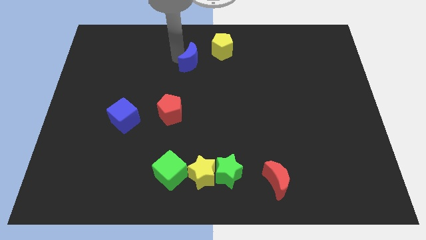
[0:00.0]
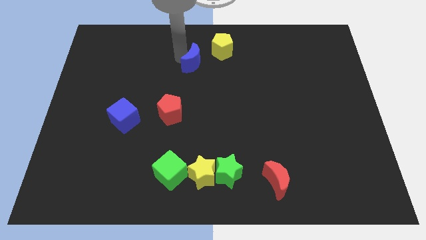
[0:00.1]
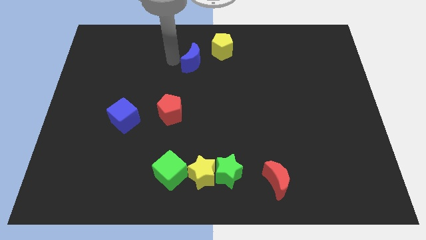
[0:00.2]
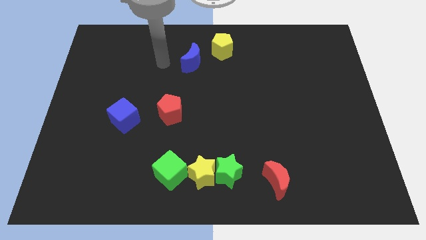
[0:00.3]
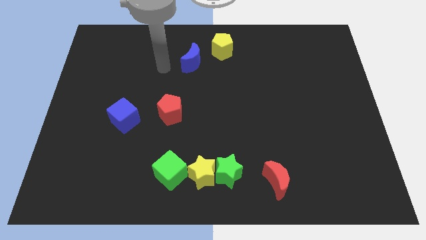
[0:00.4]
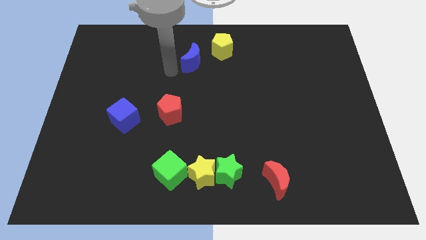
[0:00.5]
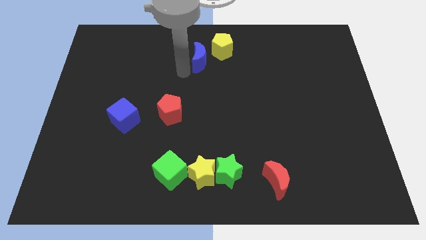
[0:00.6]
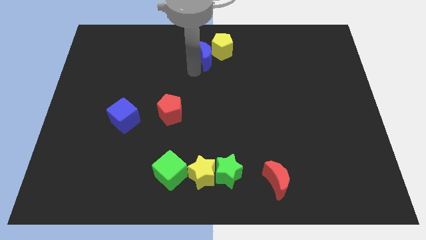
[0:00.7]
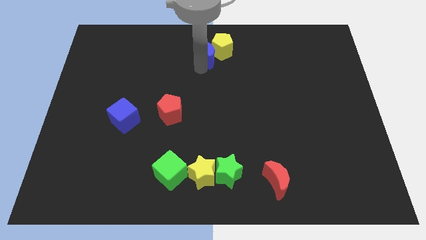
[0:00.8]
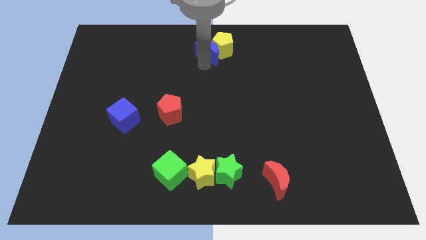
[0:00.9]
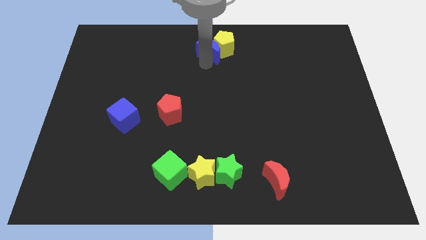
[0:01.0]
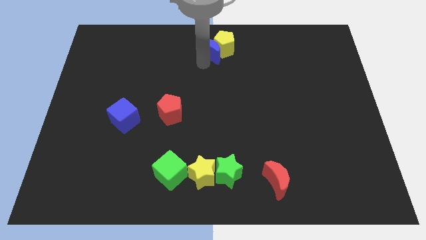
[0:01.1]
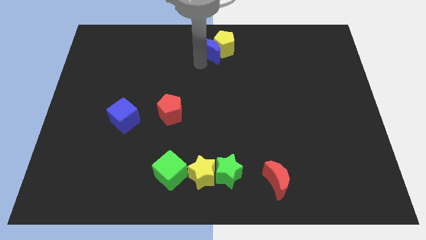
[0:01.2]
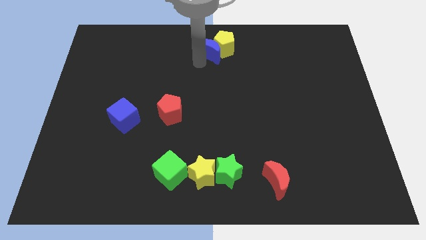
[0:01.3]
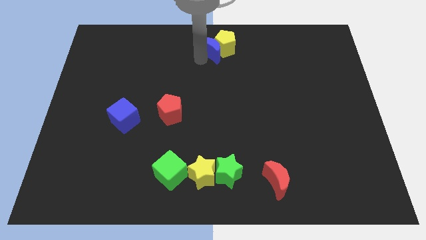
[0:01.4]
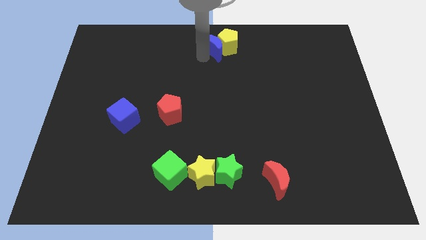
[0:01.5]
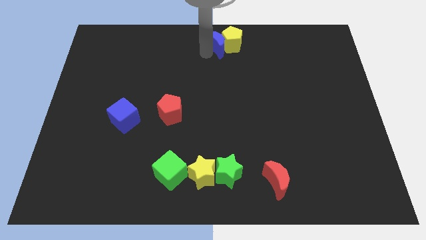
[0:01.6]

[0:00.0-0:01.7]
push the blue moon into the yellow pentagon

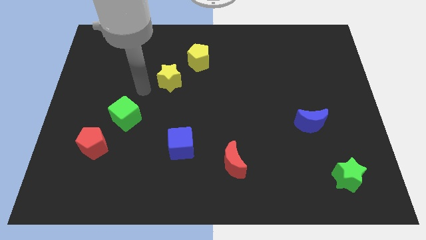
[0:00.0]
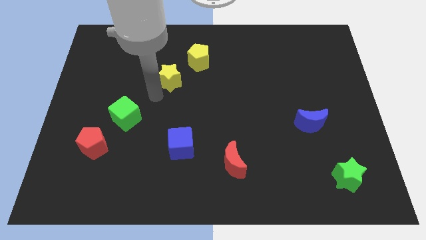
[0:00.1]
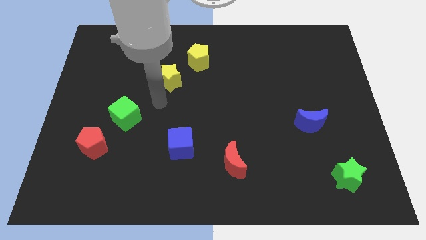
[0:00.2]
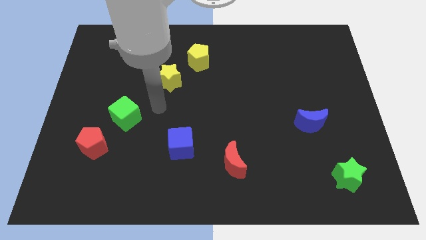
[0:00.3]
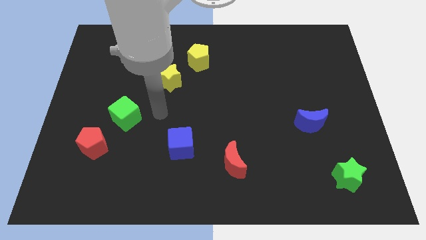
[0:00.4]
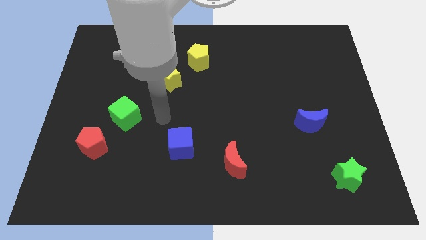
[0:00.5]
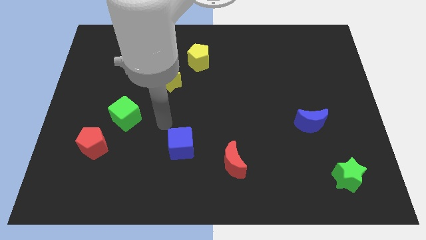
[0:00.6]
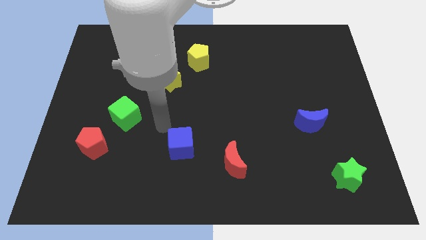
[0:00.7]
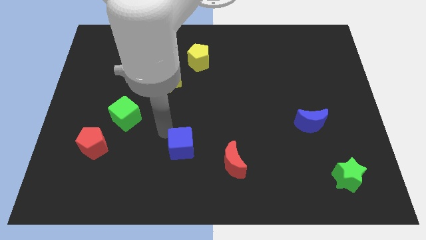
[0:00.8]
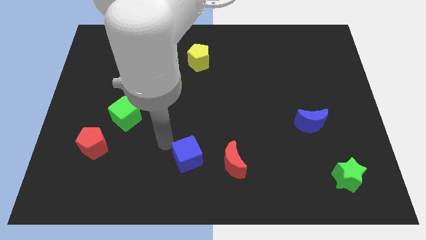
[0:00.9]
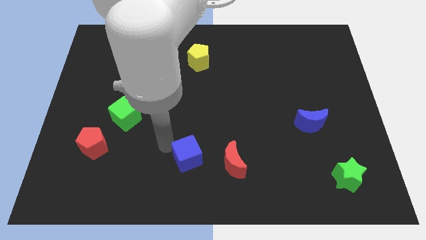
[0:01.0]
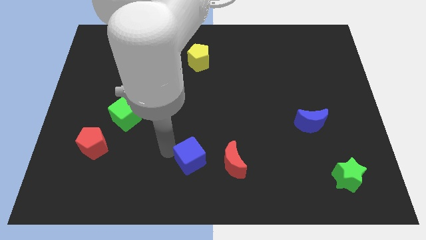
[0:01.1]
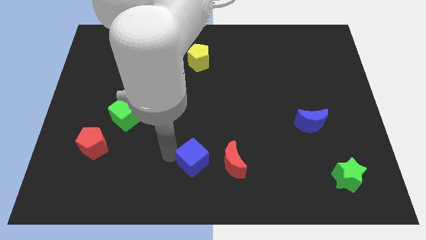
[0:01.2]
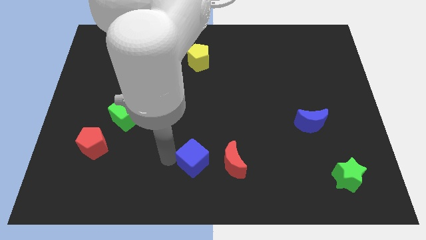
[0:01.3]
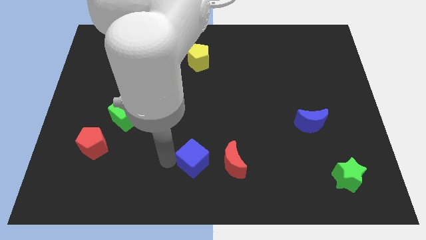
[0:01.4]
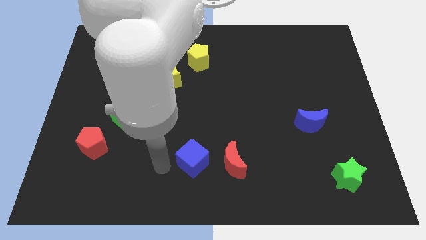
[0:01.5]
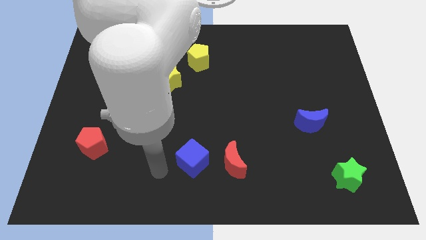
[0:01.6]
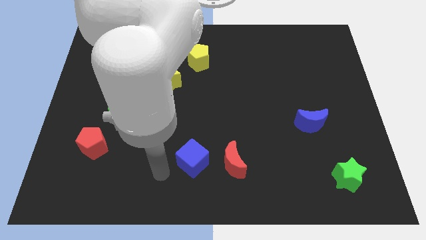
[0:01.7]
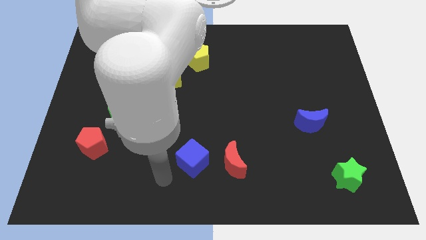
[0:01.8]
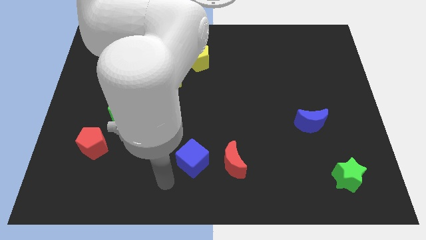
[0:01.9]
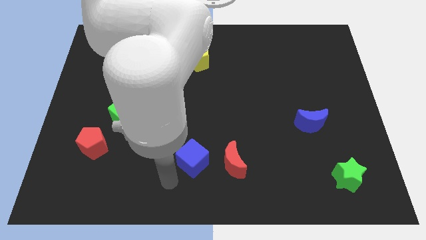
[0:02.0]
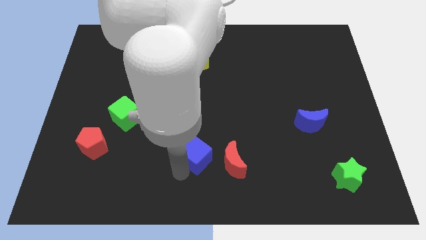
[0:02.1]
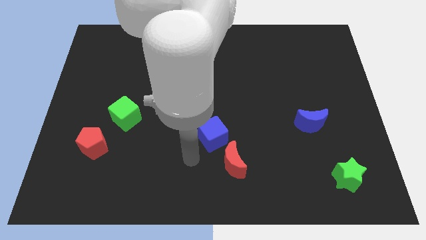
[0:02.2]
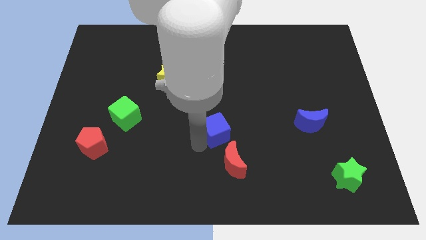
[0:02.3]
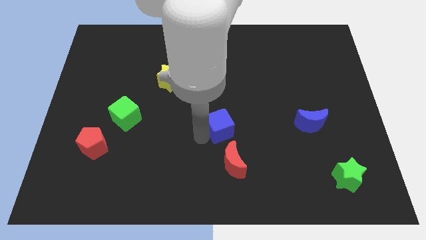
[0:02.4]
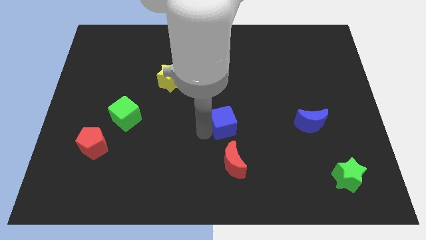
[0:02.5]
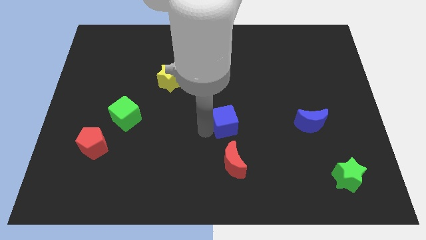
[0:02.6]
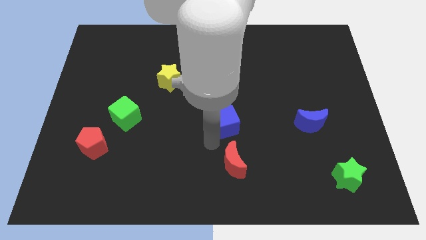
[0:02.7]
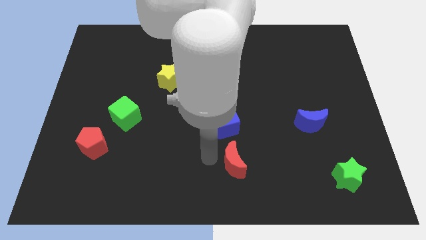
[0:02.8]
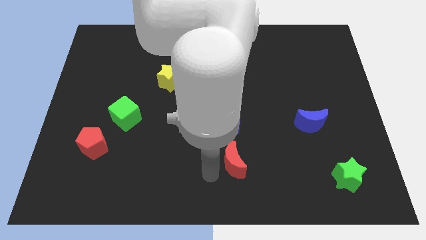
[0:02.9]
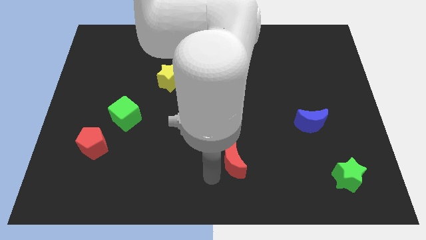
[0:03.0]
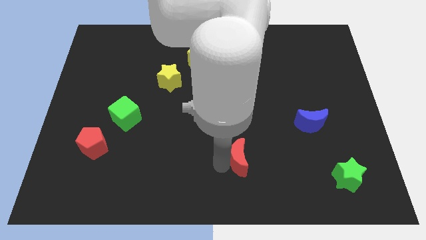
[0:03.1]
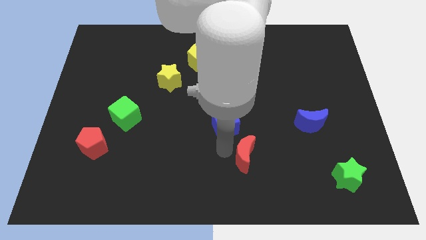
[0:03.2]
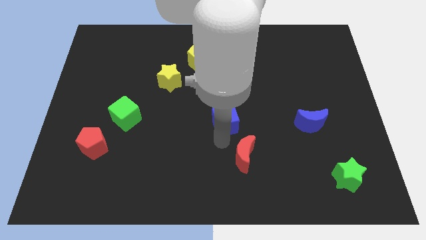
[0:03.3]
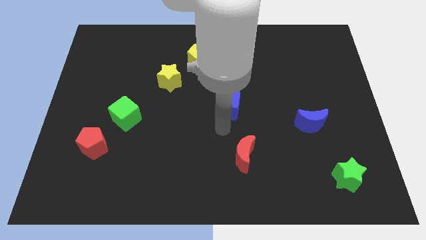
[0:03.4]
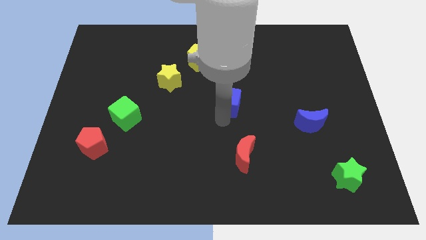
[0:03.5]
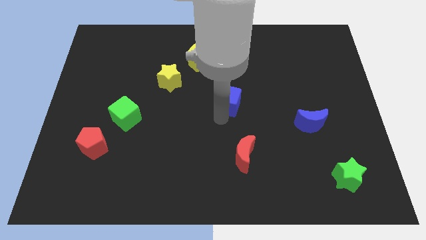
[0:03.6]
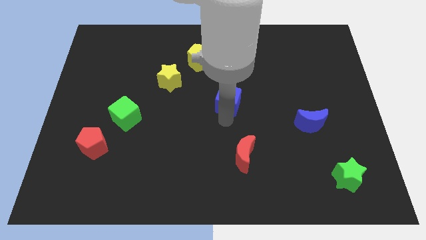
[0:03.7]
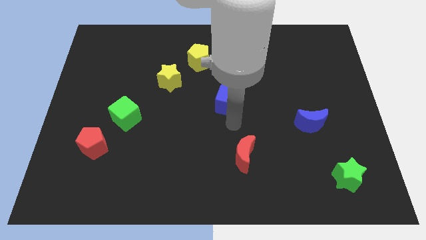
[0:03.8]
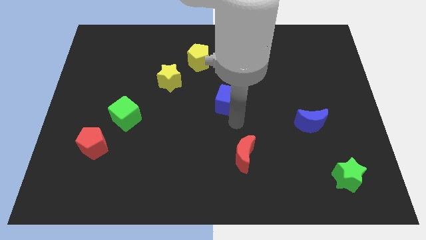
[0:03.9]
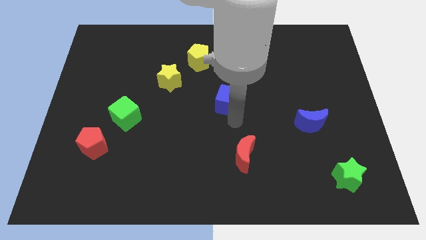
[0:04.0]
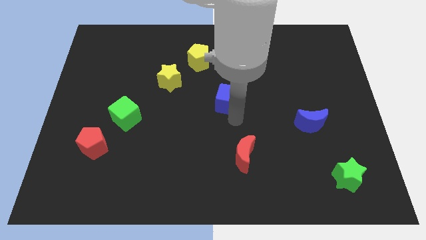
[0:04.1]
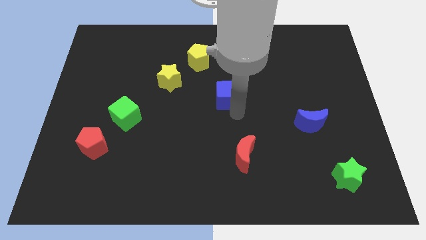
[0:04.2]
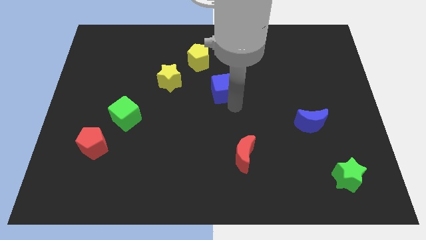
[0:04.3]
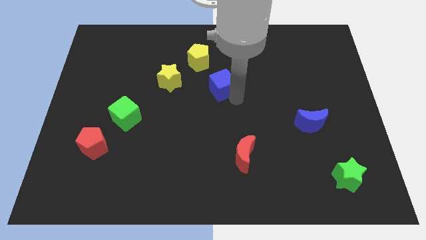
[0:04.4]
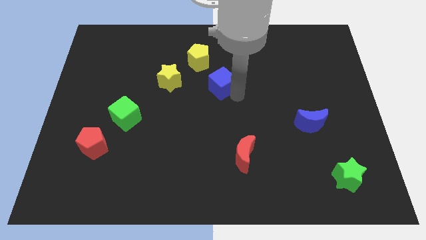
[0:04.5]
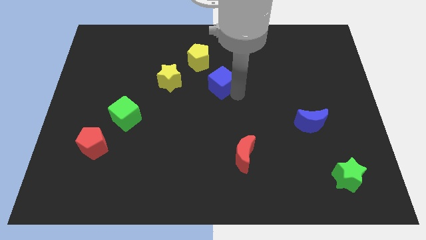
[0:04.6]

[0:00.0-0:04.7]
place the blue cube right to the yellow star

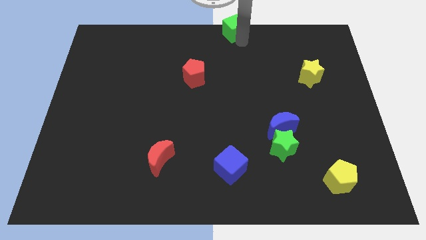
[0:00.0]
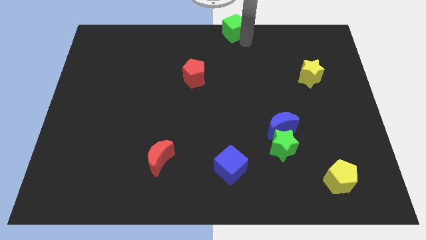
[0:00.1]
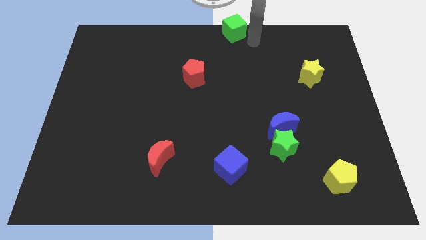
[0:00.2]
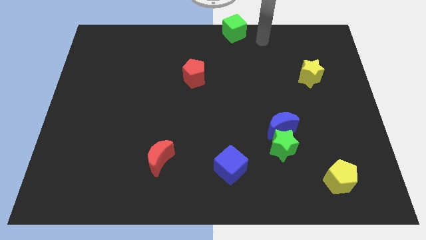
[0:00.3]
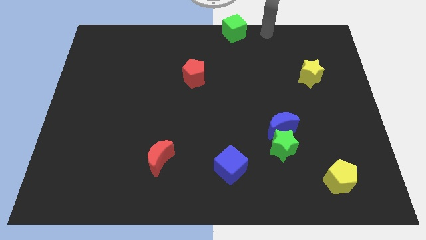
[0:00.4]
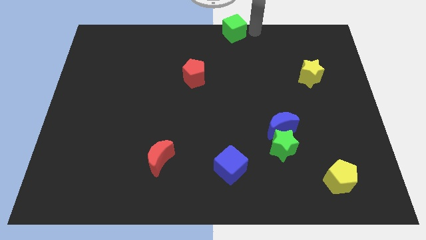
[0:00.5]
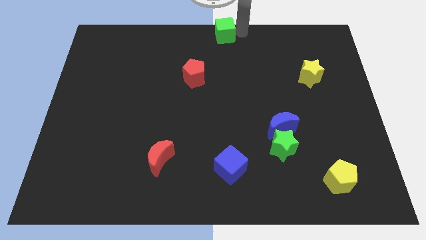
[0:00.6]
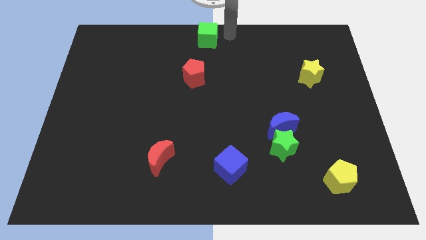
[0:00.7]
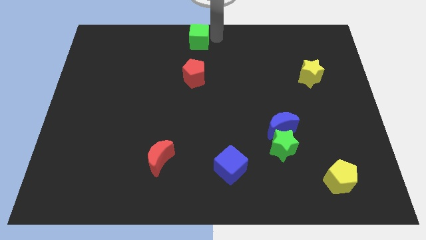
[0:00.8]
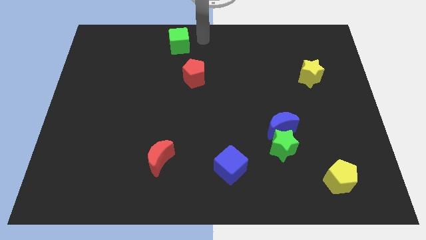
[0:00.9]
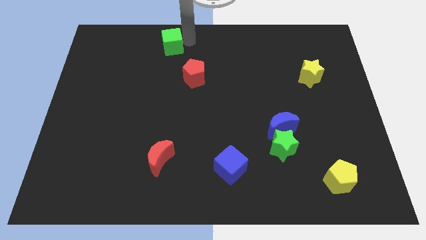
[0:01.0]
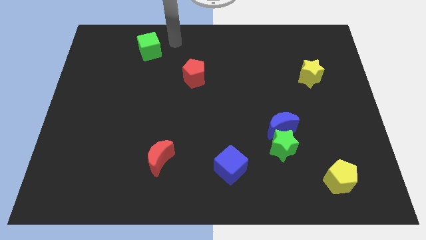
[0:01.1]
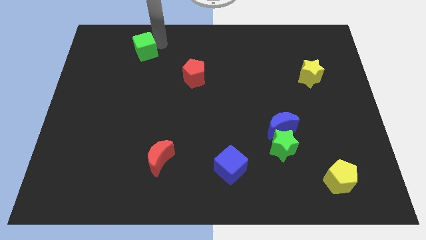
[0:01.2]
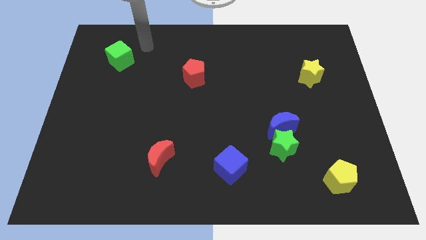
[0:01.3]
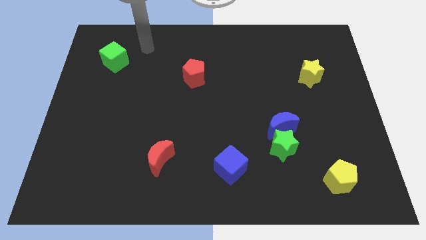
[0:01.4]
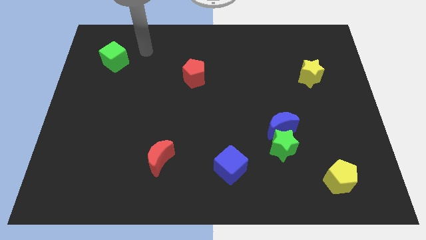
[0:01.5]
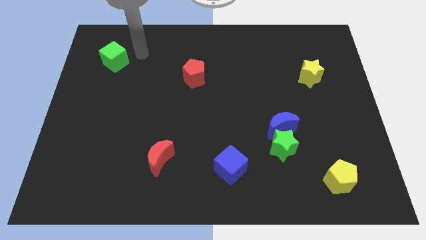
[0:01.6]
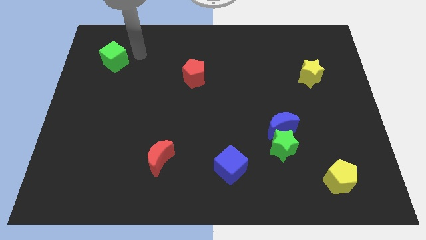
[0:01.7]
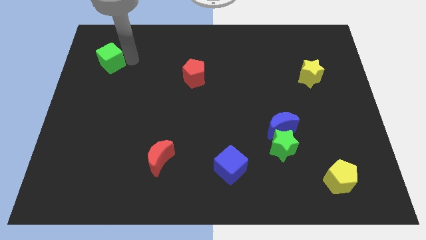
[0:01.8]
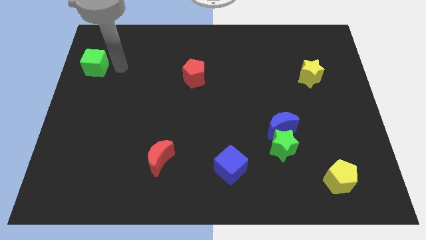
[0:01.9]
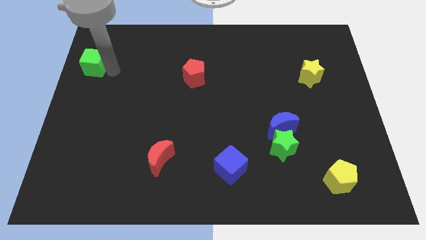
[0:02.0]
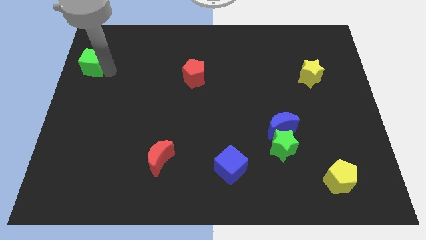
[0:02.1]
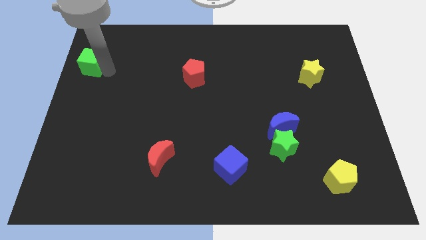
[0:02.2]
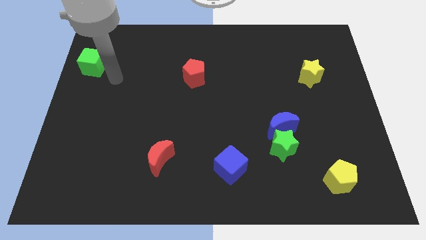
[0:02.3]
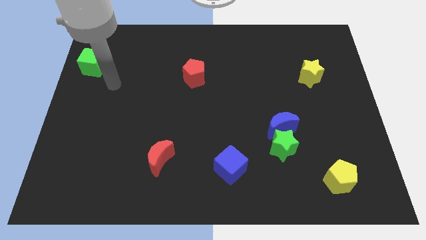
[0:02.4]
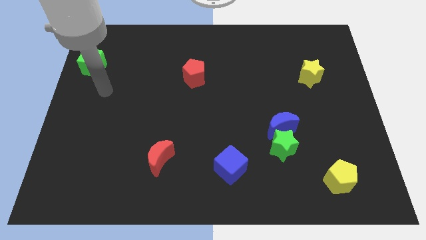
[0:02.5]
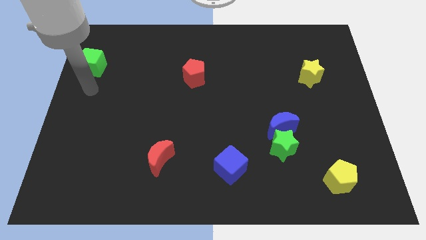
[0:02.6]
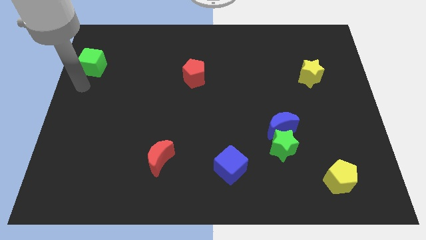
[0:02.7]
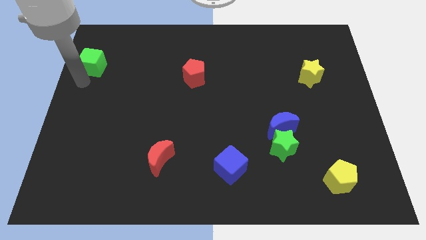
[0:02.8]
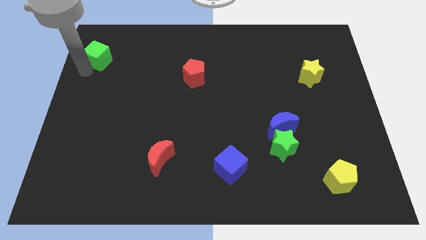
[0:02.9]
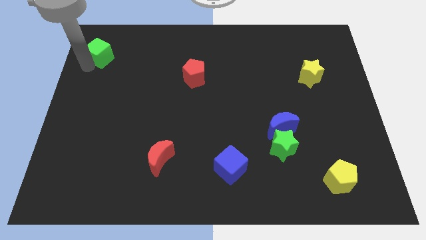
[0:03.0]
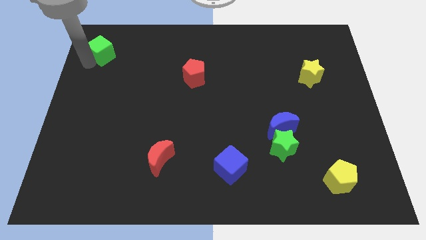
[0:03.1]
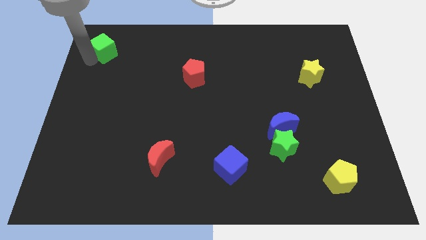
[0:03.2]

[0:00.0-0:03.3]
move the green cube to the top left corner
